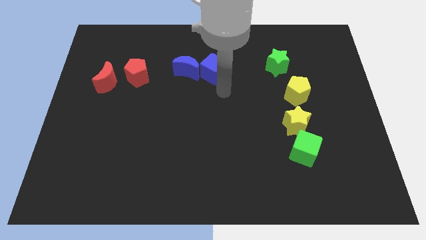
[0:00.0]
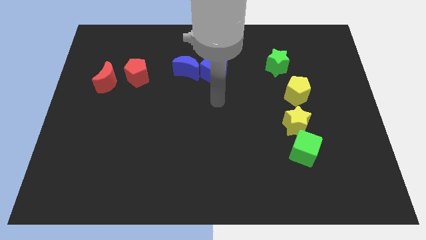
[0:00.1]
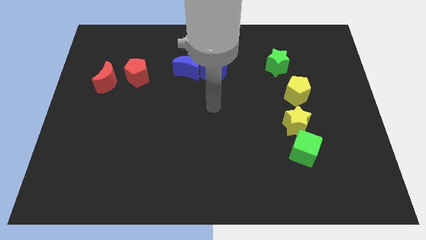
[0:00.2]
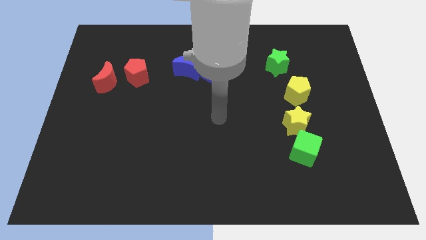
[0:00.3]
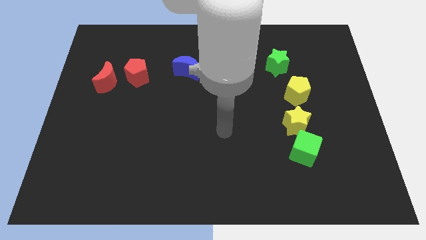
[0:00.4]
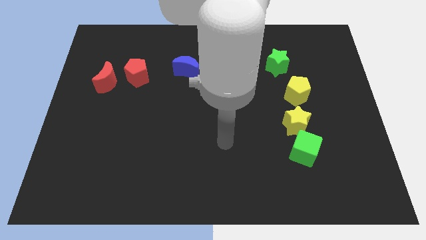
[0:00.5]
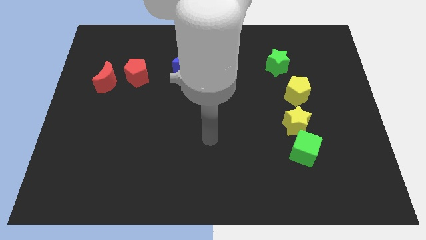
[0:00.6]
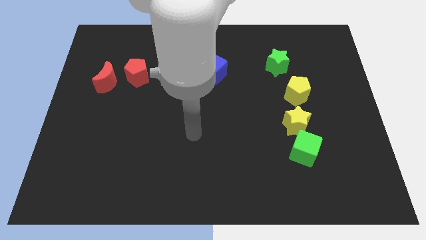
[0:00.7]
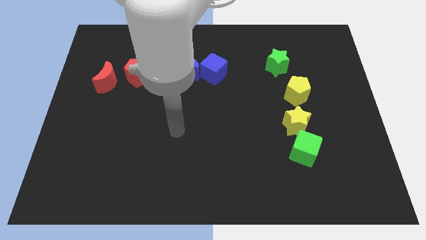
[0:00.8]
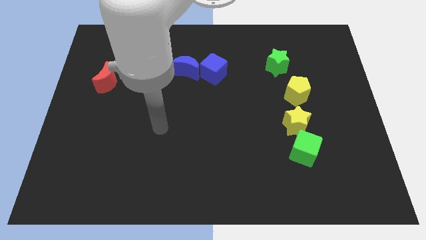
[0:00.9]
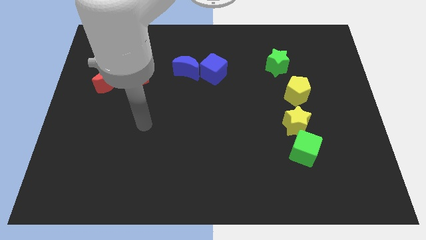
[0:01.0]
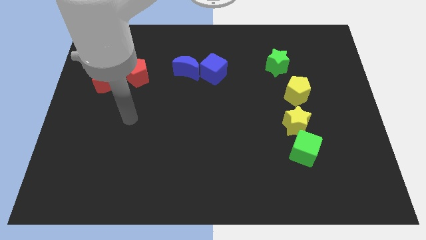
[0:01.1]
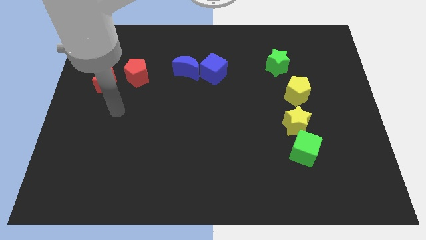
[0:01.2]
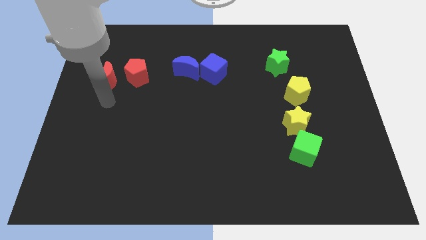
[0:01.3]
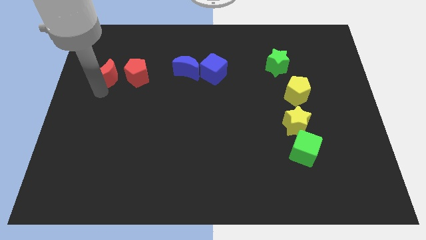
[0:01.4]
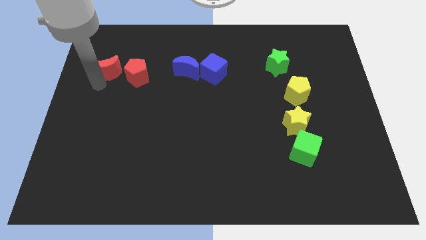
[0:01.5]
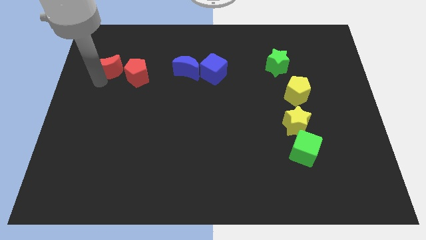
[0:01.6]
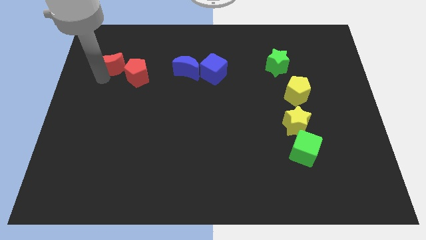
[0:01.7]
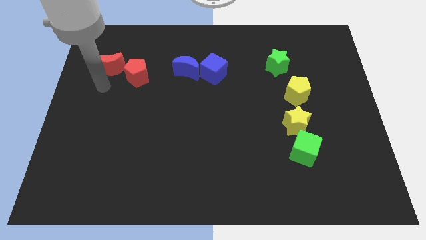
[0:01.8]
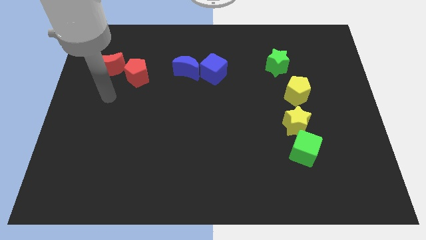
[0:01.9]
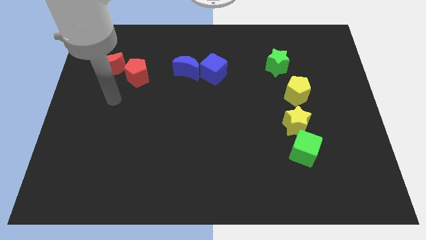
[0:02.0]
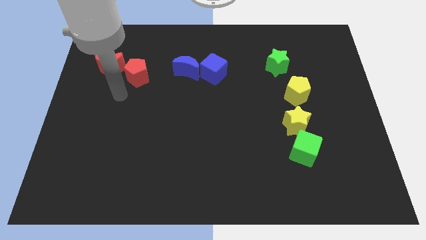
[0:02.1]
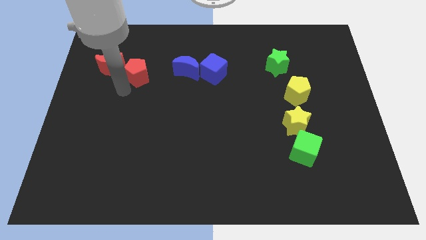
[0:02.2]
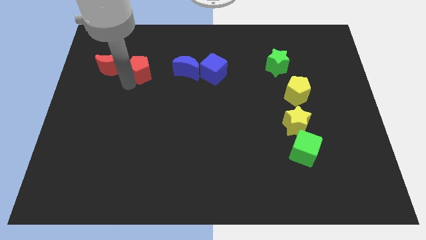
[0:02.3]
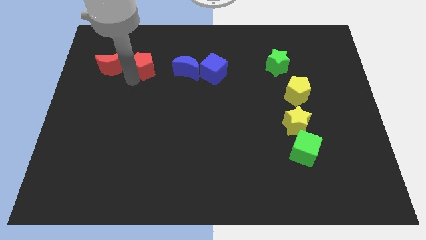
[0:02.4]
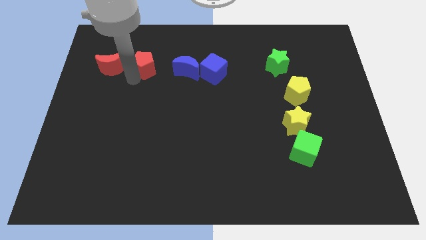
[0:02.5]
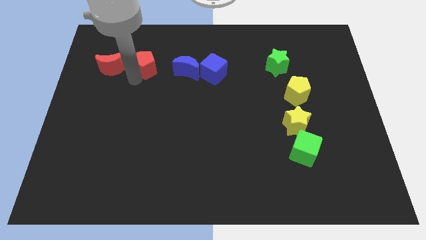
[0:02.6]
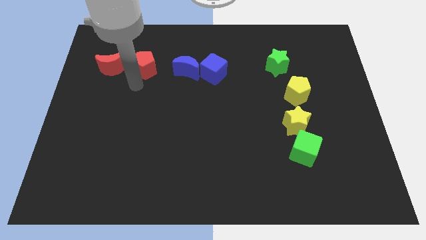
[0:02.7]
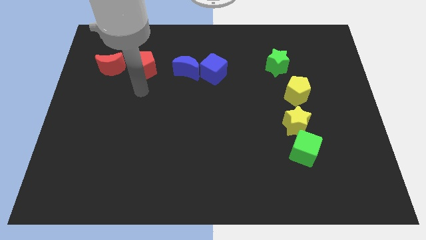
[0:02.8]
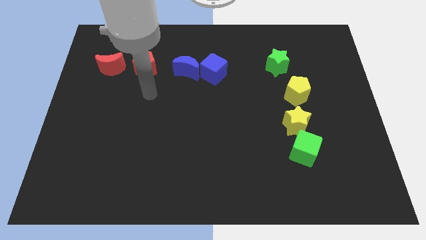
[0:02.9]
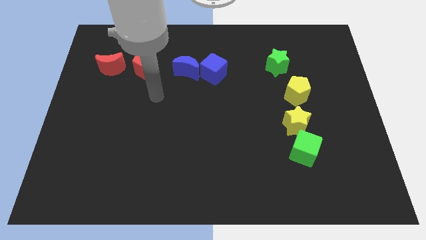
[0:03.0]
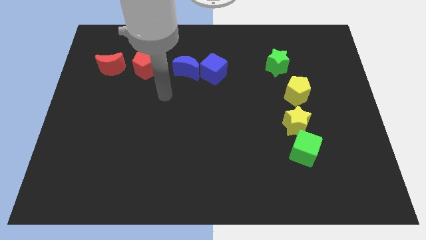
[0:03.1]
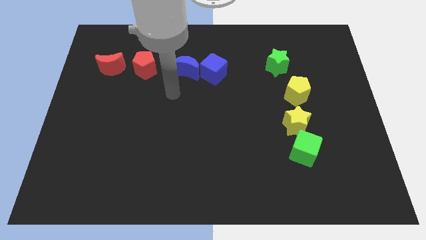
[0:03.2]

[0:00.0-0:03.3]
move the two red blocks parallel to the group of blue blocks

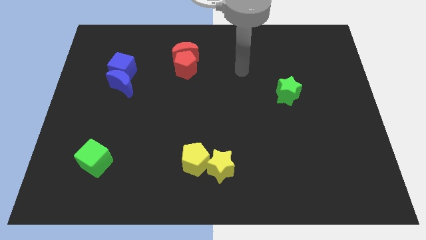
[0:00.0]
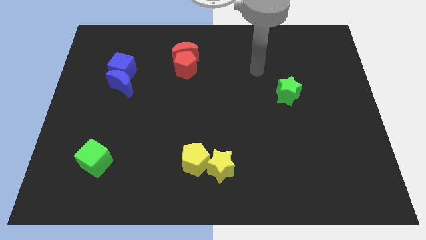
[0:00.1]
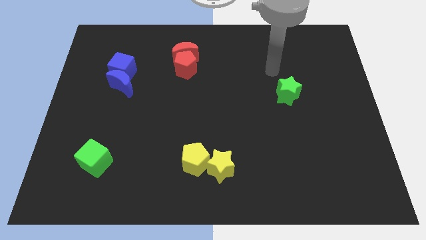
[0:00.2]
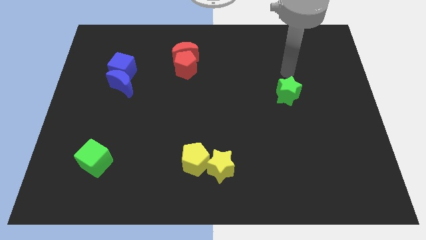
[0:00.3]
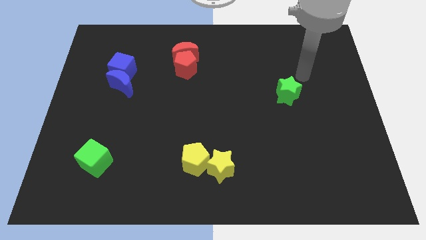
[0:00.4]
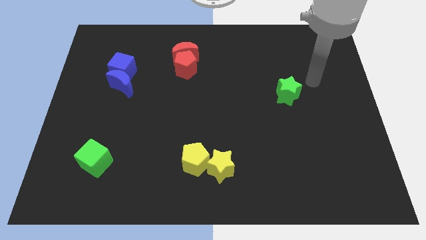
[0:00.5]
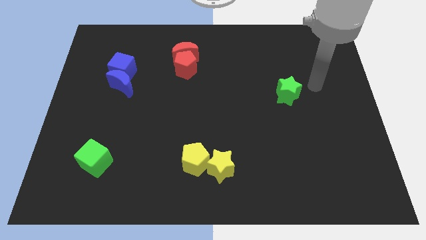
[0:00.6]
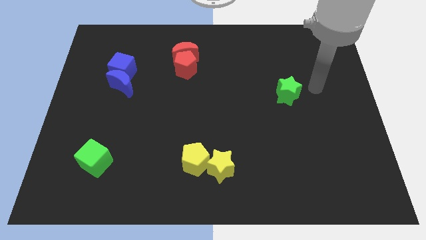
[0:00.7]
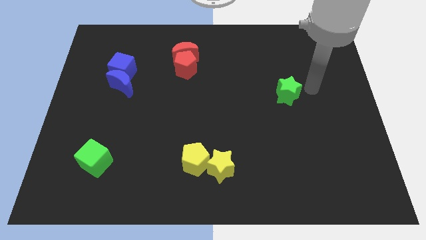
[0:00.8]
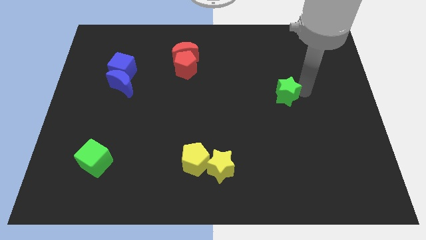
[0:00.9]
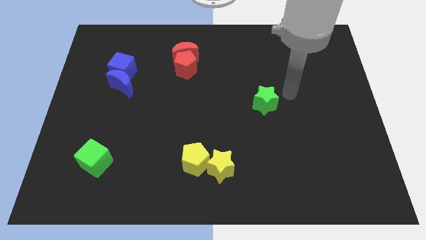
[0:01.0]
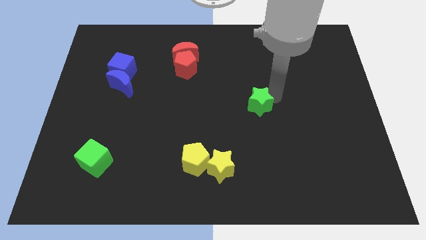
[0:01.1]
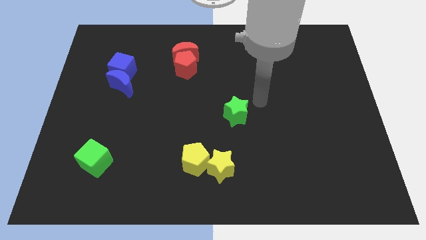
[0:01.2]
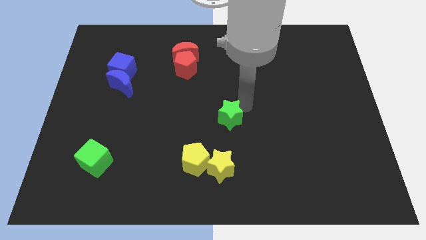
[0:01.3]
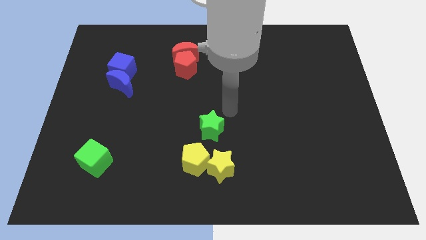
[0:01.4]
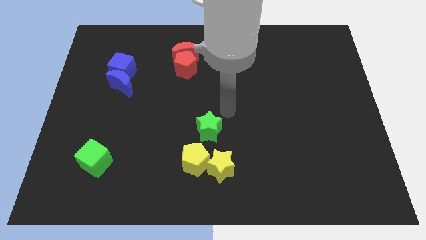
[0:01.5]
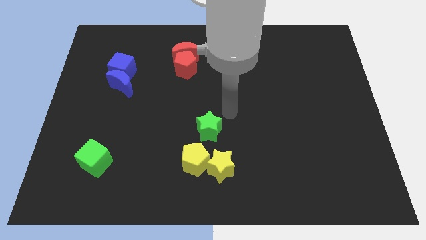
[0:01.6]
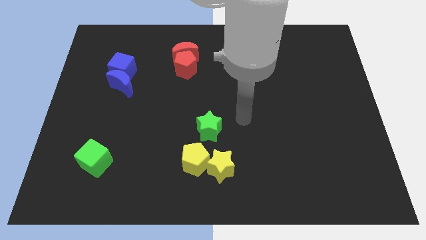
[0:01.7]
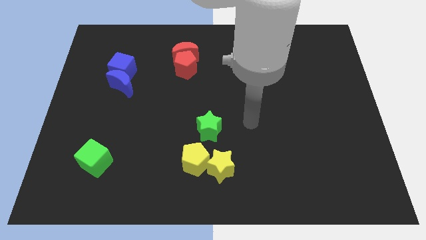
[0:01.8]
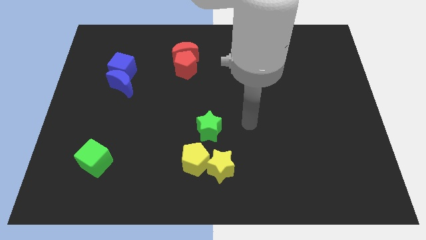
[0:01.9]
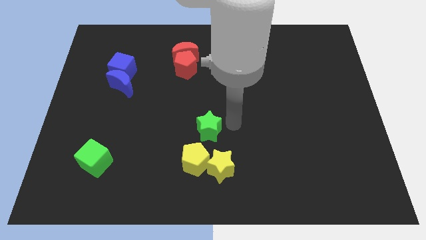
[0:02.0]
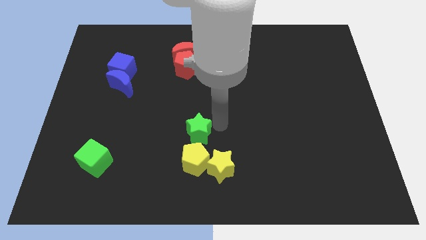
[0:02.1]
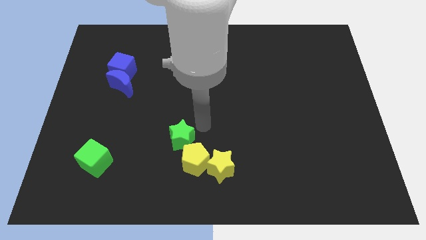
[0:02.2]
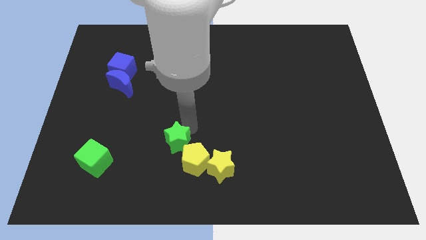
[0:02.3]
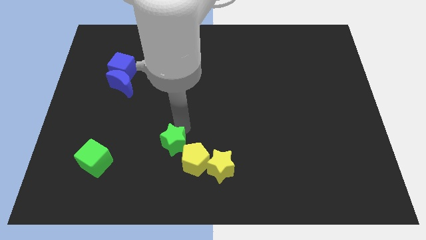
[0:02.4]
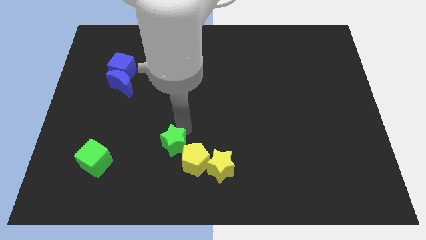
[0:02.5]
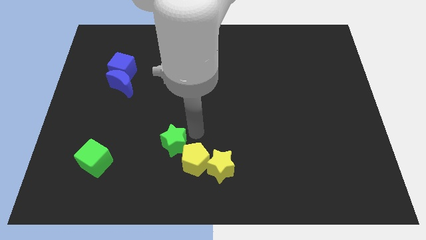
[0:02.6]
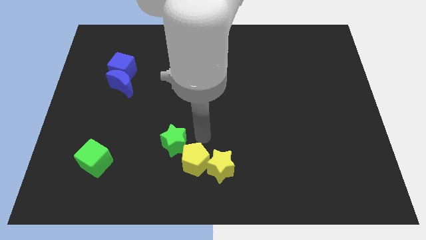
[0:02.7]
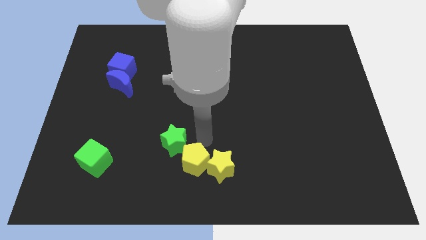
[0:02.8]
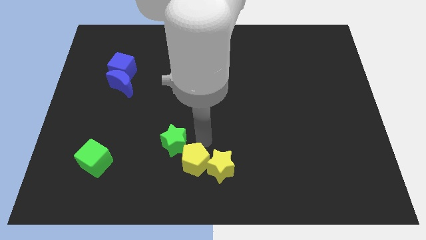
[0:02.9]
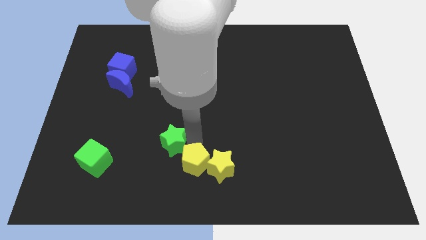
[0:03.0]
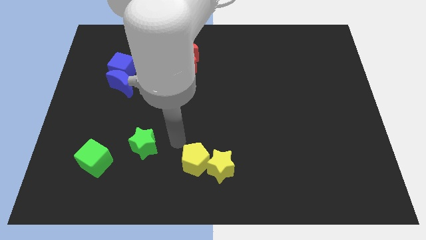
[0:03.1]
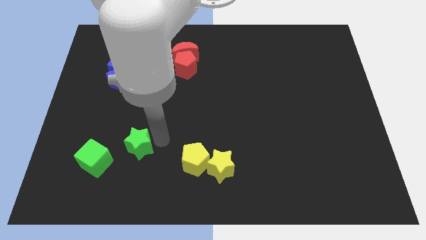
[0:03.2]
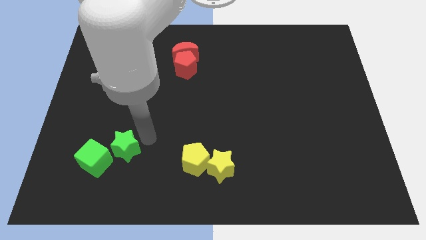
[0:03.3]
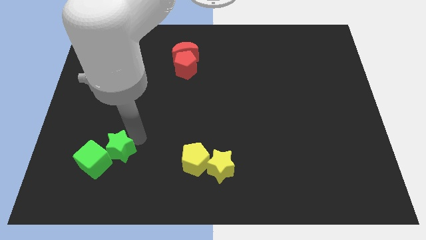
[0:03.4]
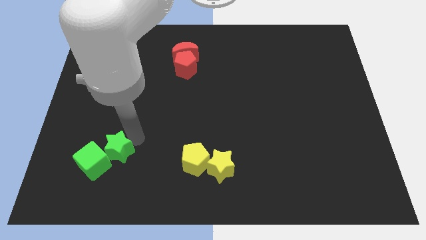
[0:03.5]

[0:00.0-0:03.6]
push the green star into the green cube

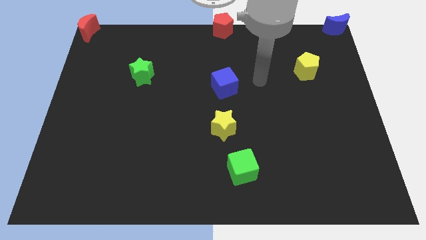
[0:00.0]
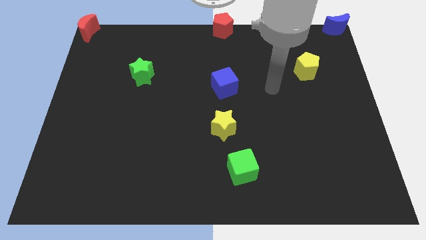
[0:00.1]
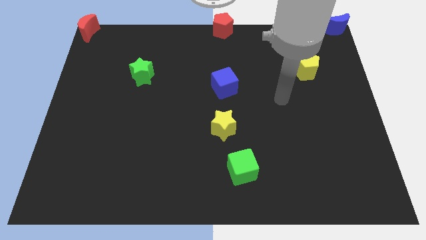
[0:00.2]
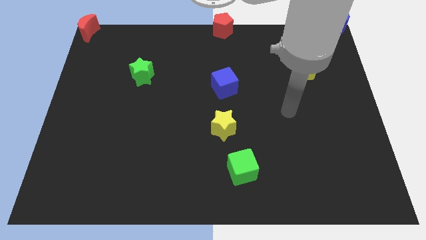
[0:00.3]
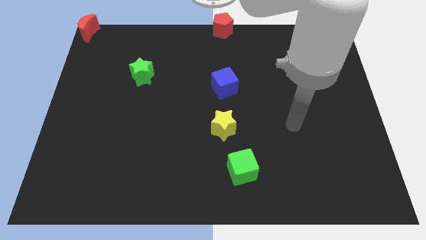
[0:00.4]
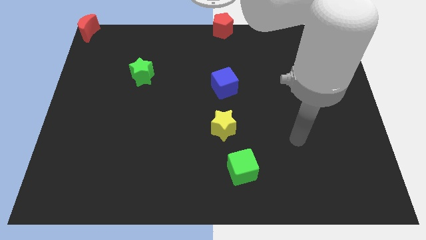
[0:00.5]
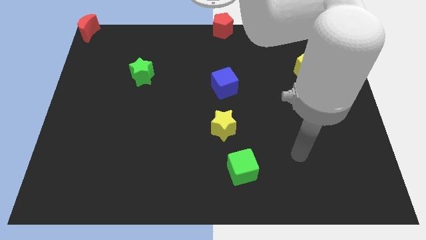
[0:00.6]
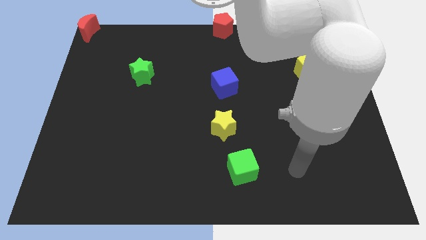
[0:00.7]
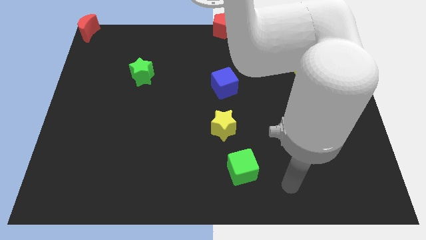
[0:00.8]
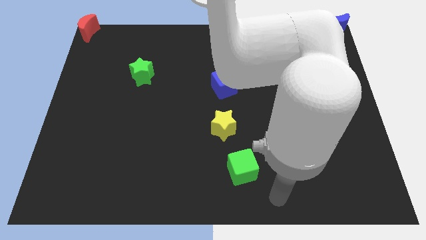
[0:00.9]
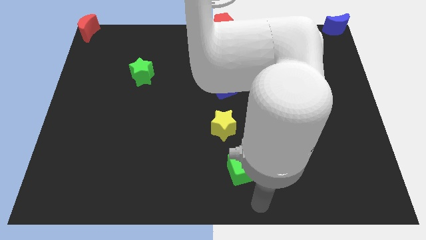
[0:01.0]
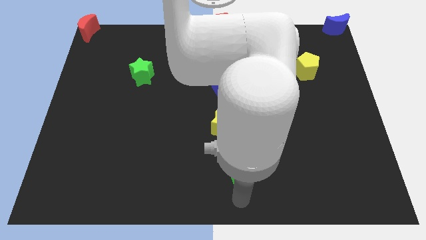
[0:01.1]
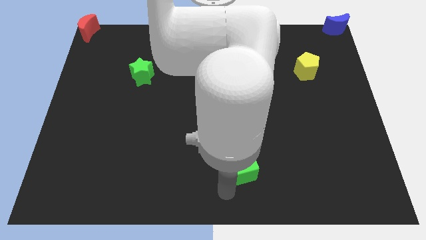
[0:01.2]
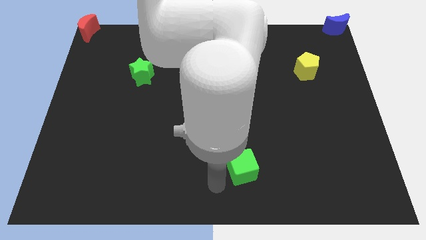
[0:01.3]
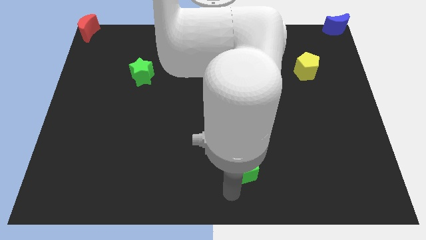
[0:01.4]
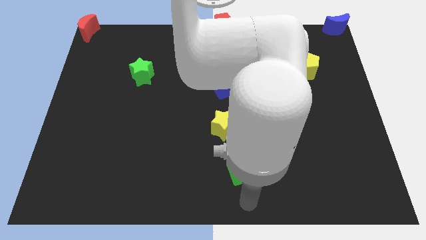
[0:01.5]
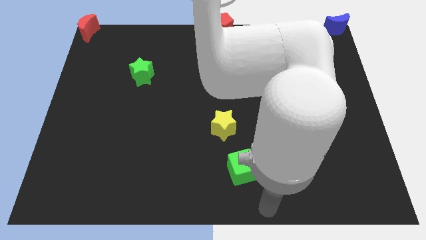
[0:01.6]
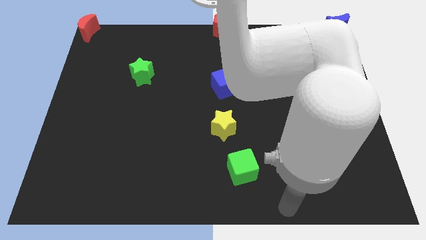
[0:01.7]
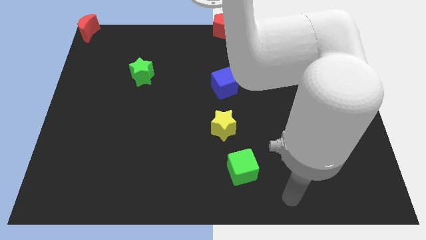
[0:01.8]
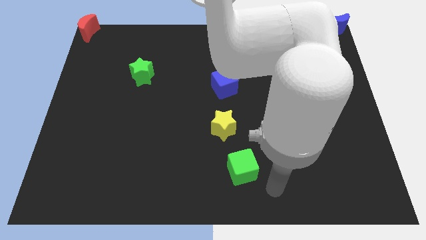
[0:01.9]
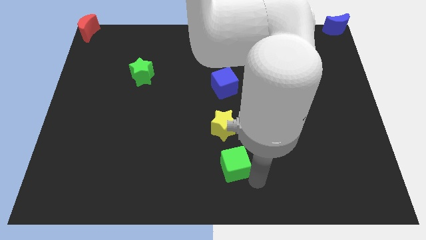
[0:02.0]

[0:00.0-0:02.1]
move your arm to the bottom of the green cube

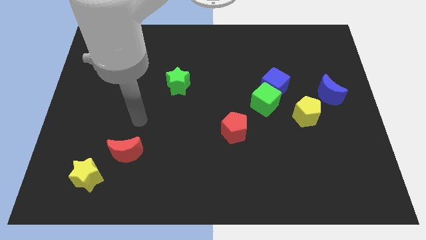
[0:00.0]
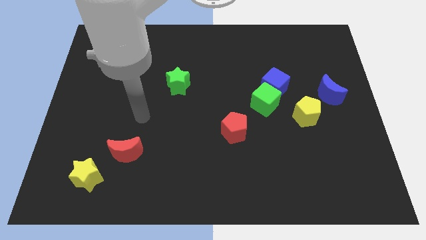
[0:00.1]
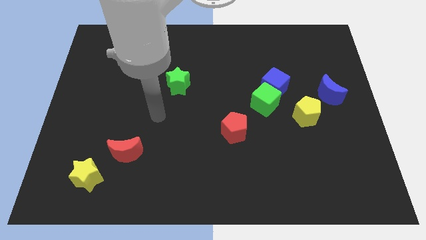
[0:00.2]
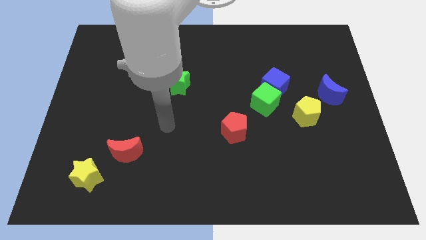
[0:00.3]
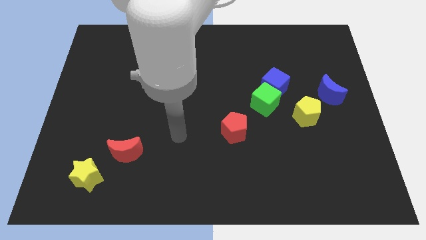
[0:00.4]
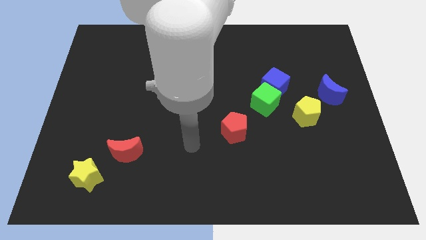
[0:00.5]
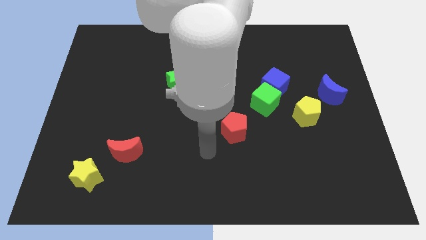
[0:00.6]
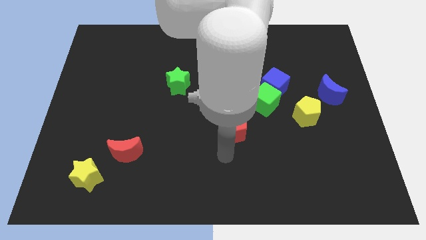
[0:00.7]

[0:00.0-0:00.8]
place arm at the bottom of red pentagon
